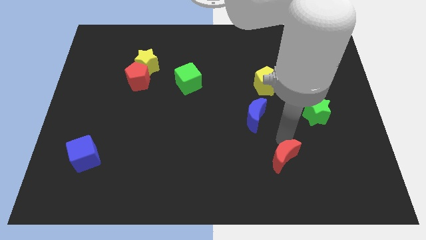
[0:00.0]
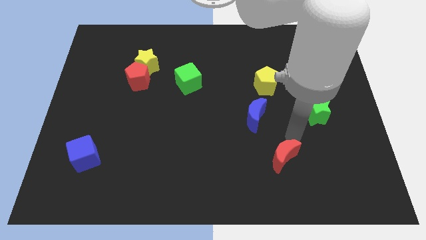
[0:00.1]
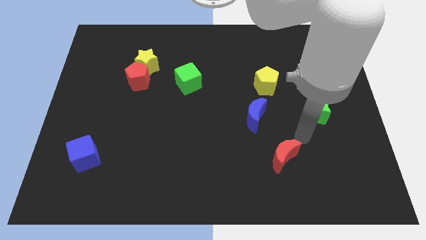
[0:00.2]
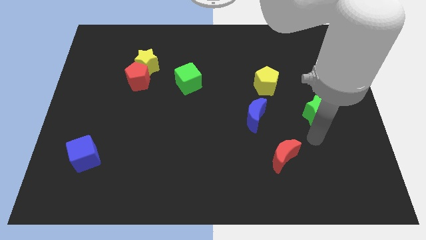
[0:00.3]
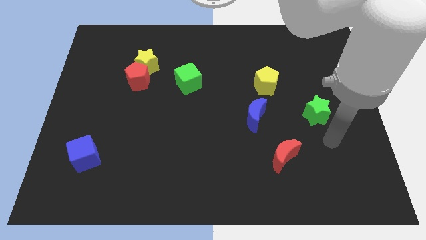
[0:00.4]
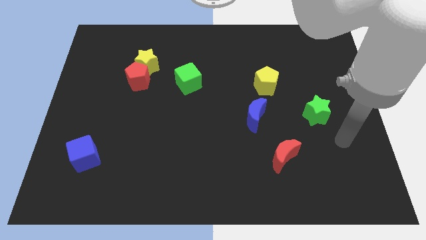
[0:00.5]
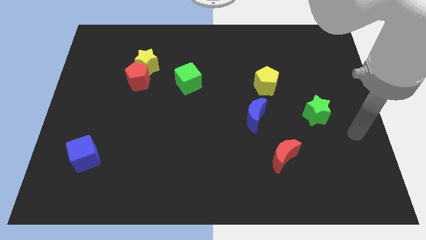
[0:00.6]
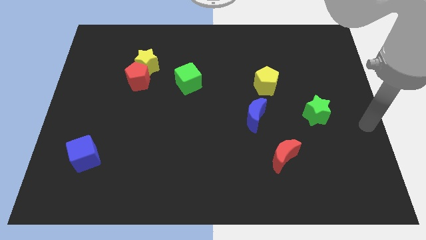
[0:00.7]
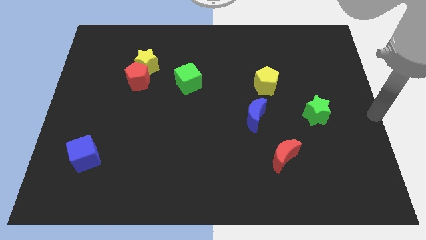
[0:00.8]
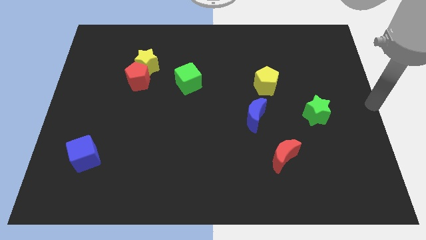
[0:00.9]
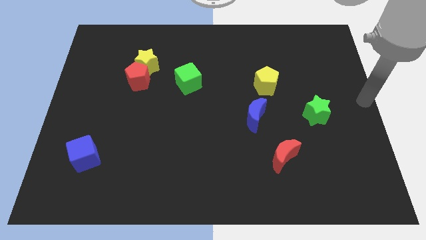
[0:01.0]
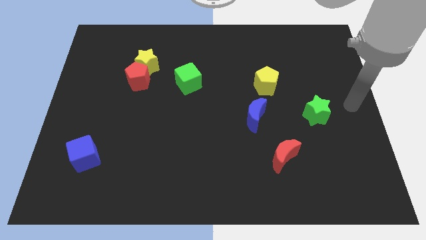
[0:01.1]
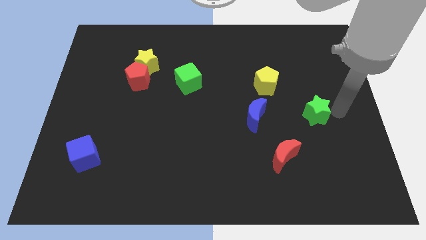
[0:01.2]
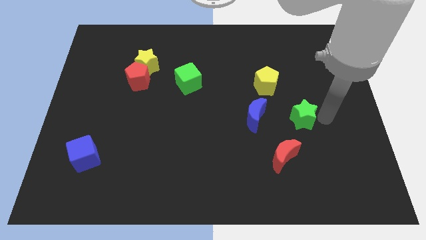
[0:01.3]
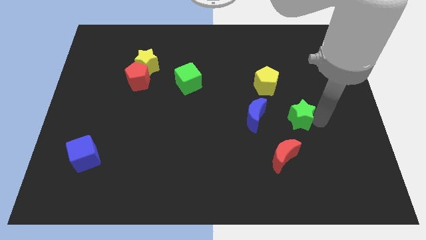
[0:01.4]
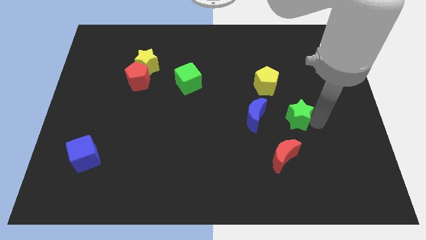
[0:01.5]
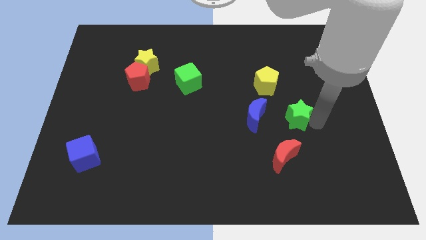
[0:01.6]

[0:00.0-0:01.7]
move the arm towards green star

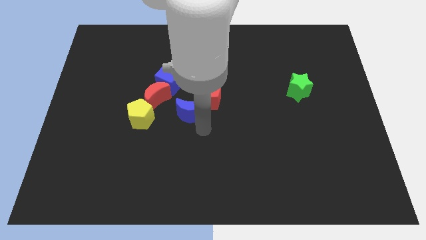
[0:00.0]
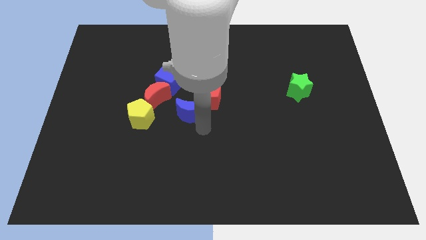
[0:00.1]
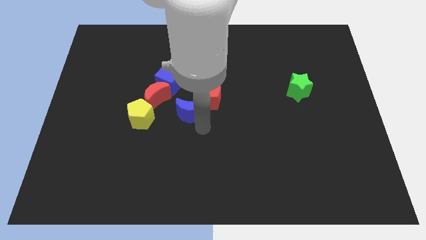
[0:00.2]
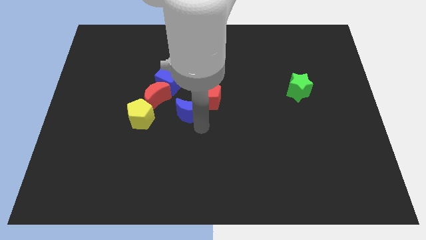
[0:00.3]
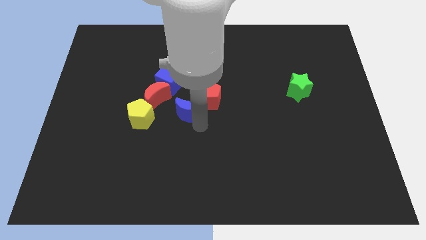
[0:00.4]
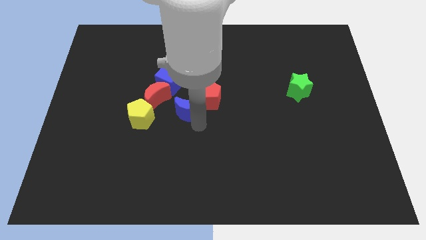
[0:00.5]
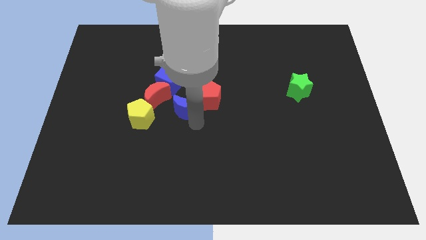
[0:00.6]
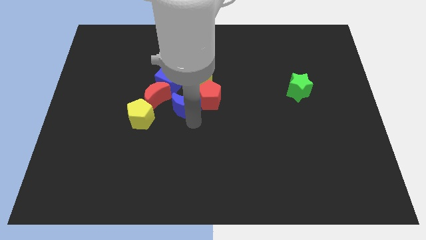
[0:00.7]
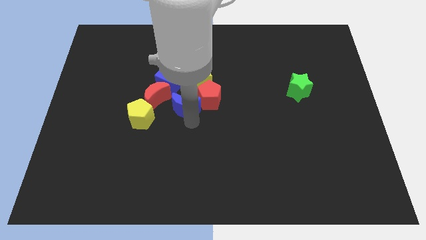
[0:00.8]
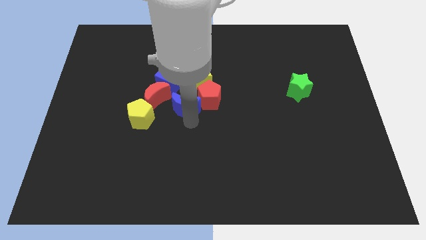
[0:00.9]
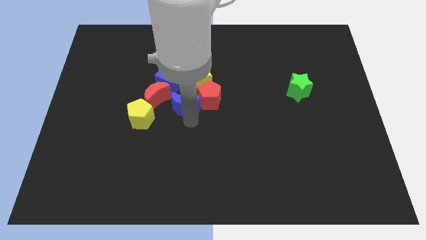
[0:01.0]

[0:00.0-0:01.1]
place the blue crescent left to the red pentagon

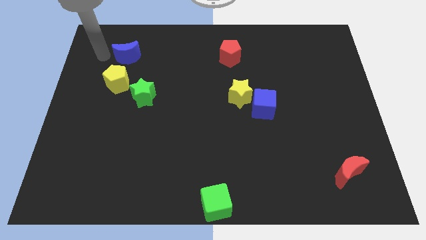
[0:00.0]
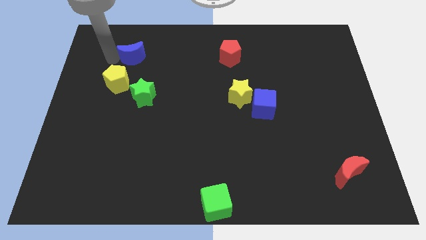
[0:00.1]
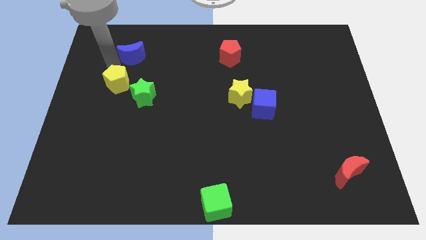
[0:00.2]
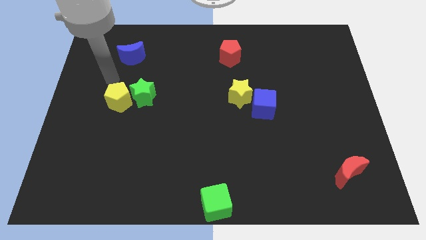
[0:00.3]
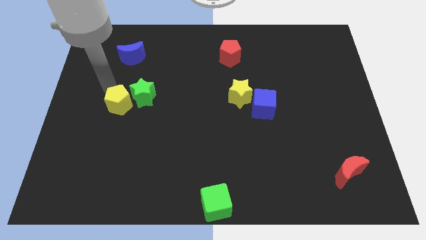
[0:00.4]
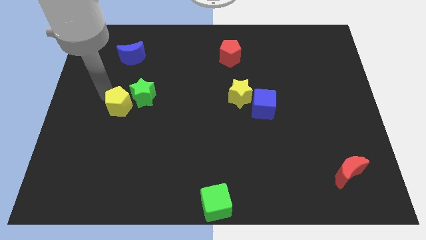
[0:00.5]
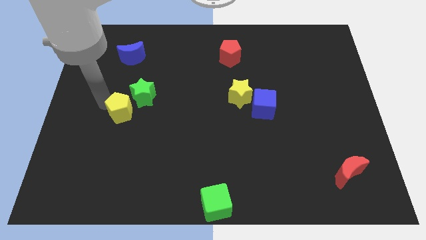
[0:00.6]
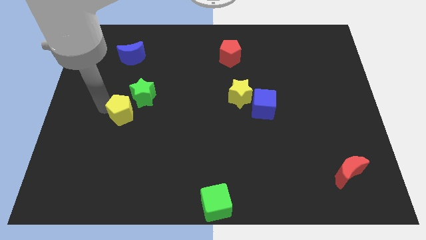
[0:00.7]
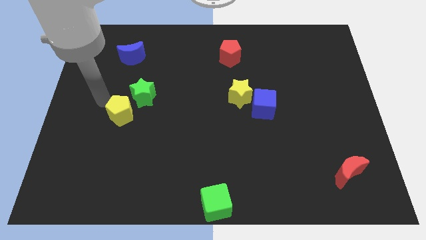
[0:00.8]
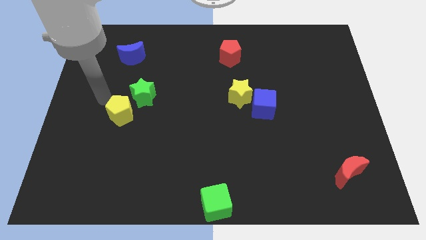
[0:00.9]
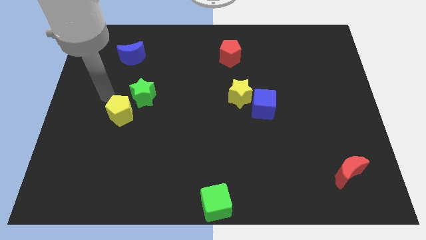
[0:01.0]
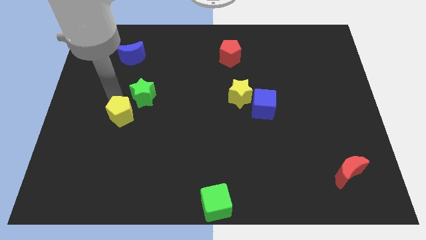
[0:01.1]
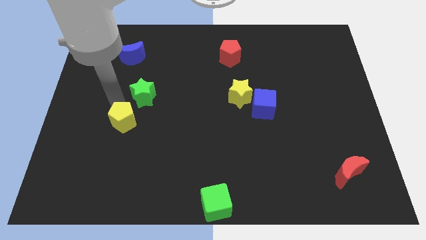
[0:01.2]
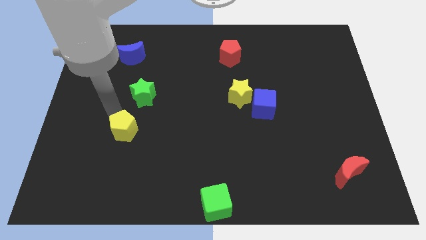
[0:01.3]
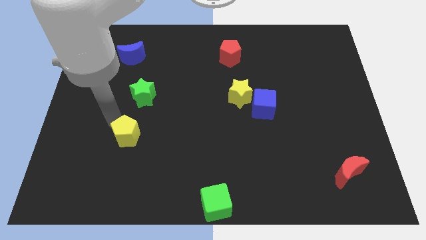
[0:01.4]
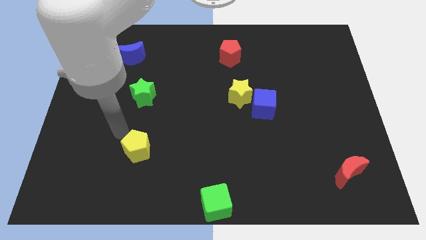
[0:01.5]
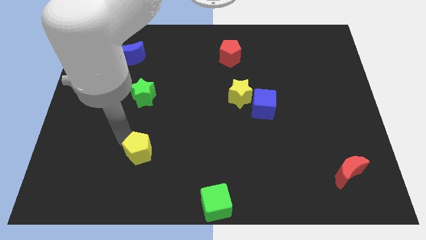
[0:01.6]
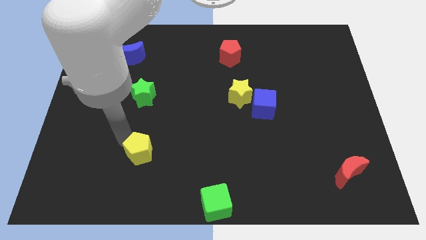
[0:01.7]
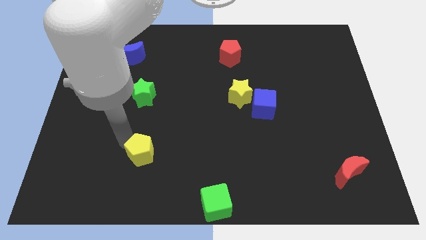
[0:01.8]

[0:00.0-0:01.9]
place the yellow pentagon vertically below the green star

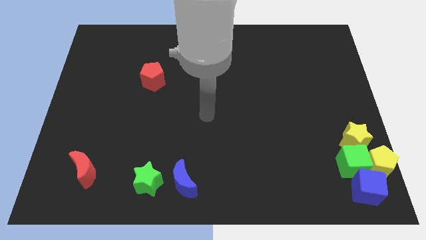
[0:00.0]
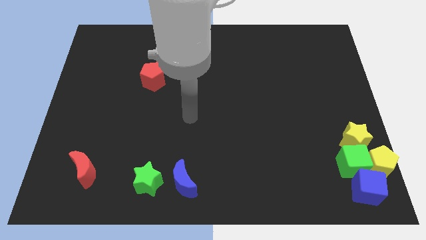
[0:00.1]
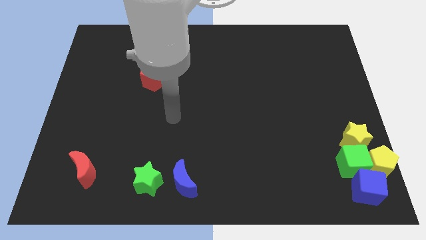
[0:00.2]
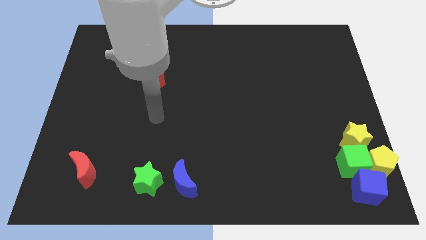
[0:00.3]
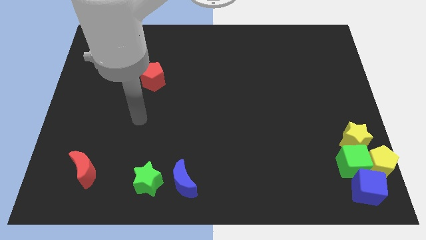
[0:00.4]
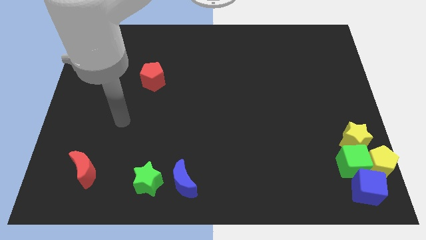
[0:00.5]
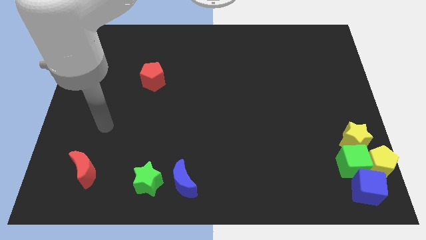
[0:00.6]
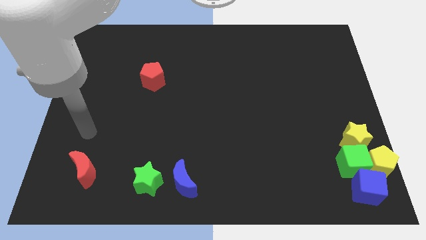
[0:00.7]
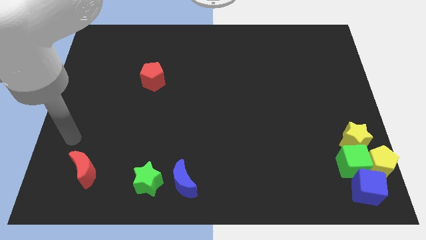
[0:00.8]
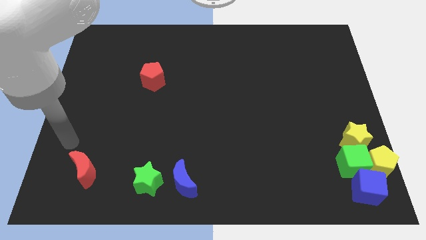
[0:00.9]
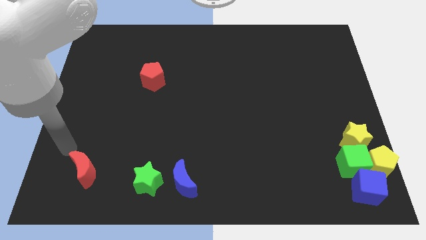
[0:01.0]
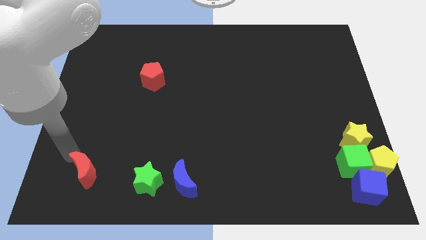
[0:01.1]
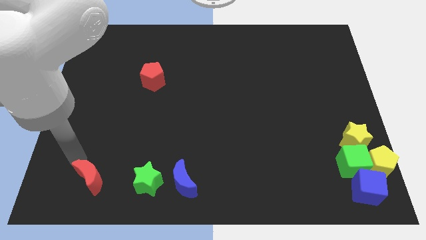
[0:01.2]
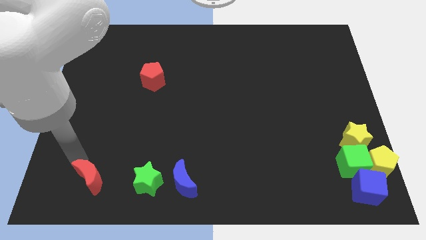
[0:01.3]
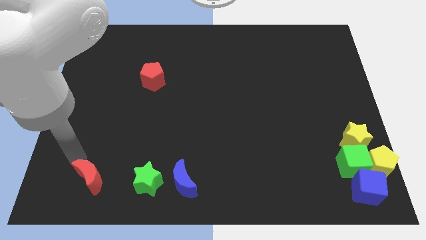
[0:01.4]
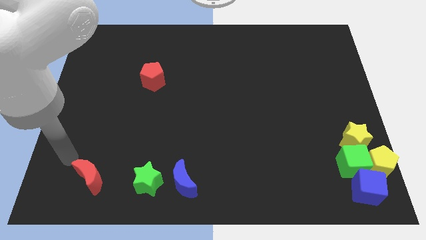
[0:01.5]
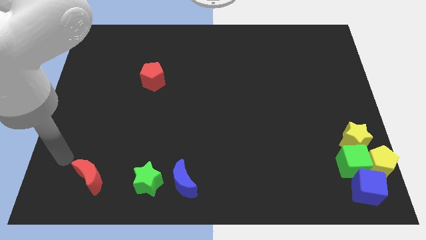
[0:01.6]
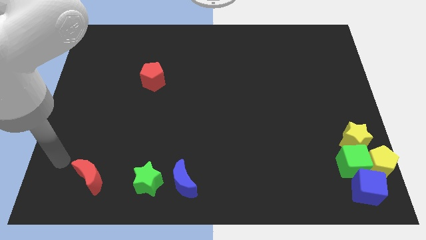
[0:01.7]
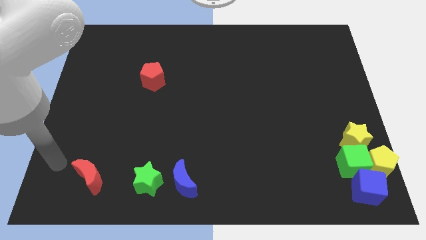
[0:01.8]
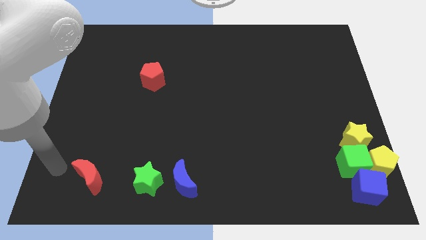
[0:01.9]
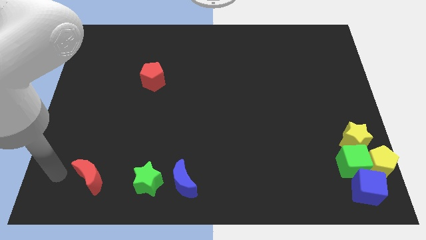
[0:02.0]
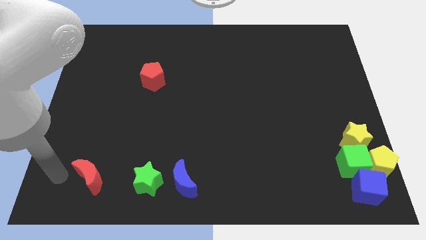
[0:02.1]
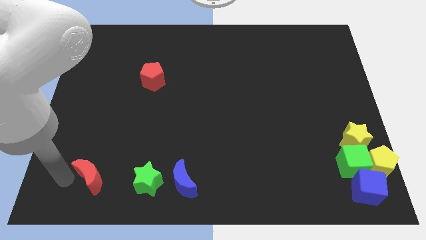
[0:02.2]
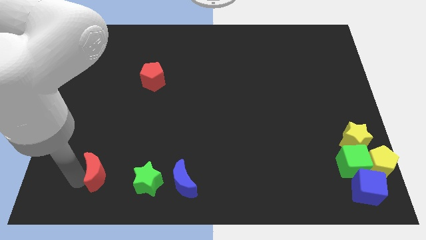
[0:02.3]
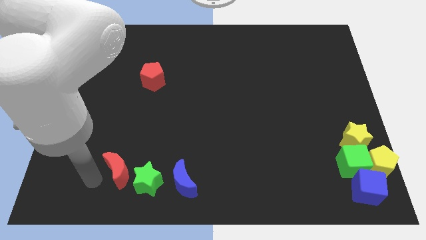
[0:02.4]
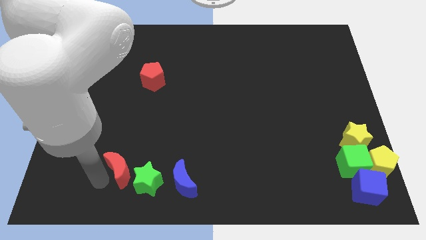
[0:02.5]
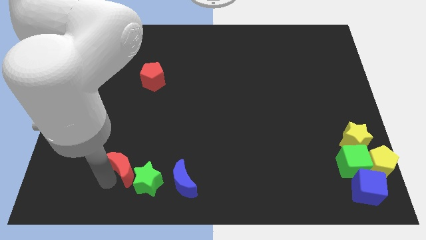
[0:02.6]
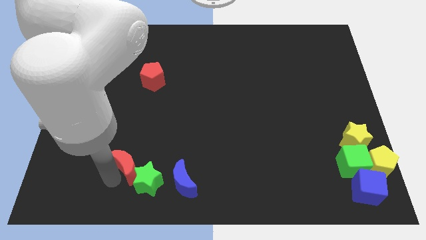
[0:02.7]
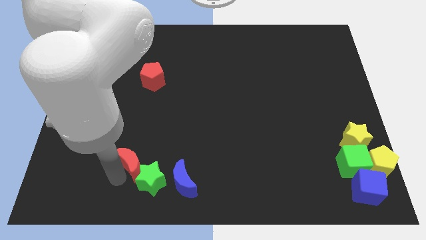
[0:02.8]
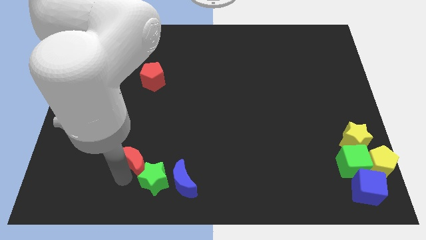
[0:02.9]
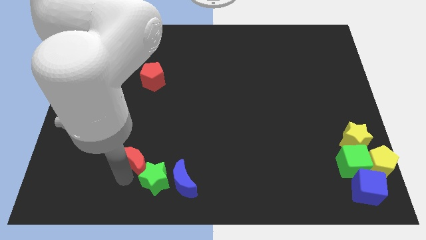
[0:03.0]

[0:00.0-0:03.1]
push the red moon into a green star

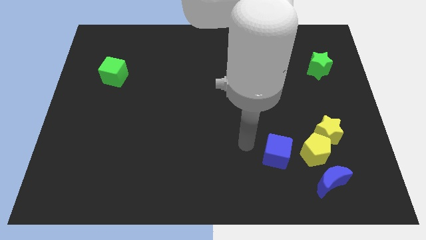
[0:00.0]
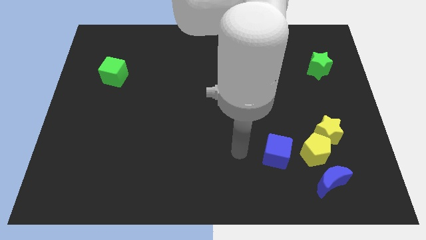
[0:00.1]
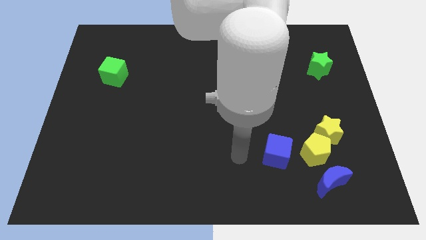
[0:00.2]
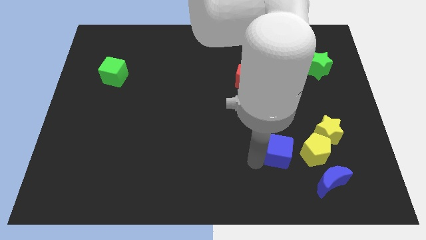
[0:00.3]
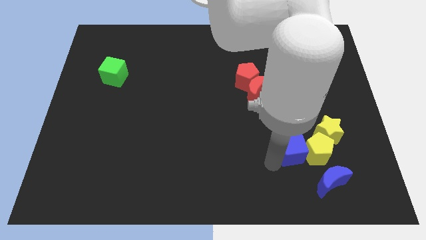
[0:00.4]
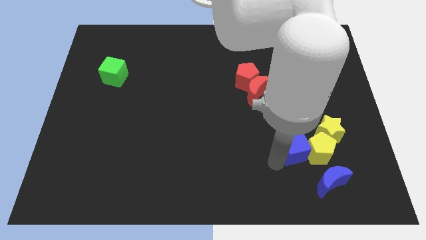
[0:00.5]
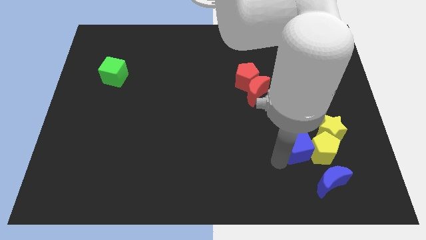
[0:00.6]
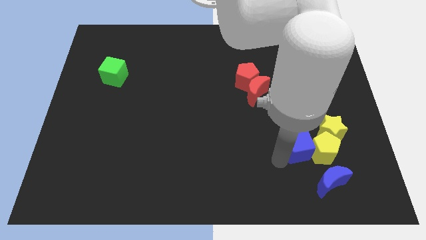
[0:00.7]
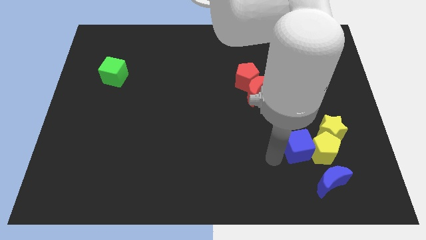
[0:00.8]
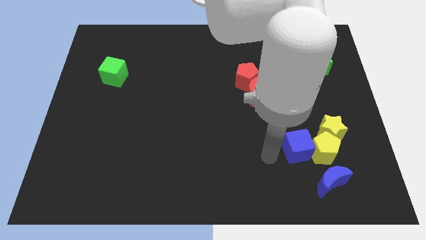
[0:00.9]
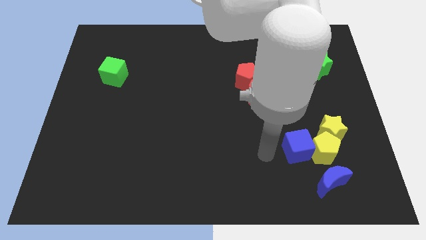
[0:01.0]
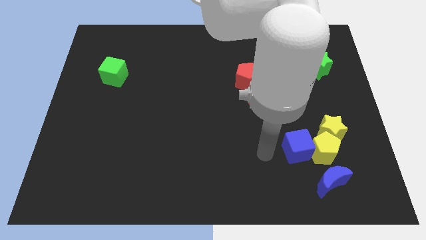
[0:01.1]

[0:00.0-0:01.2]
push blue cube into yellow pentagon

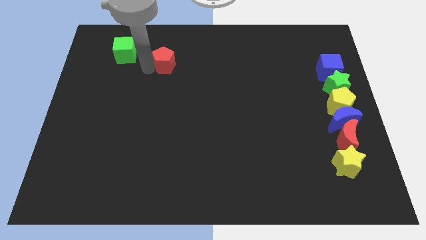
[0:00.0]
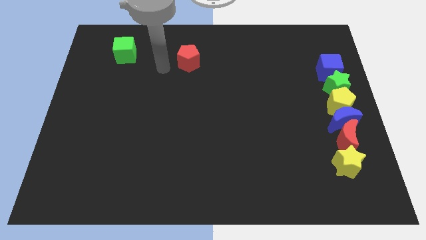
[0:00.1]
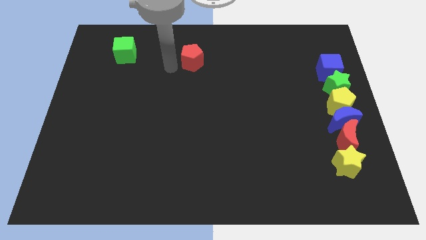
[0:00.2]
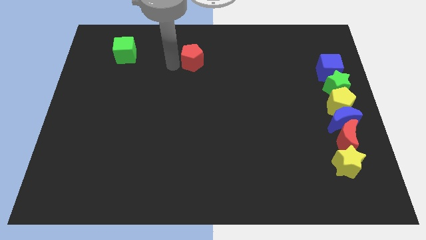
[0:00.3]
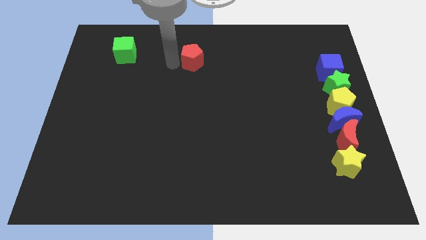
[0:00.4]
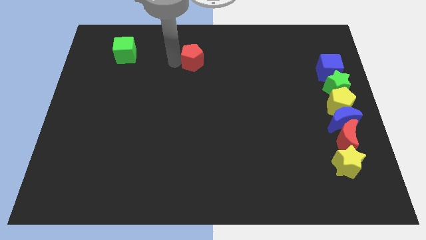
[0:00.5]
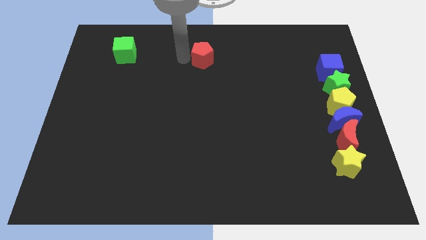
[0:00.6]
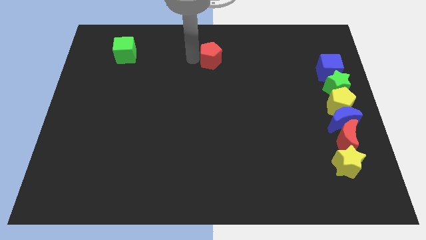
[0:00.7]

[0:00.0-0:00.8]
place red pentagon at the top center of the board
